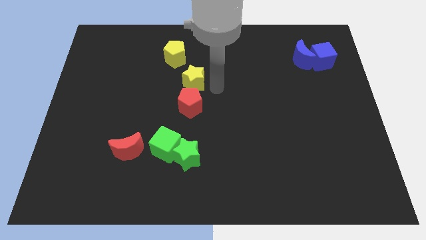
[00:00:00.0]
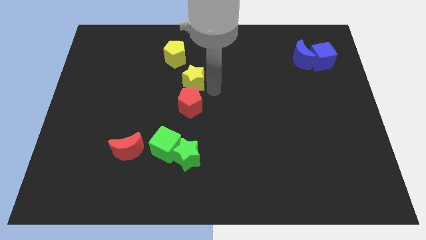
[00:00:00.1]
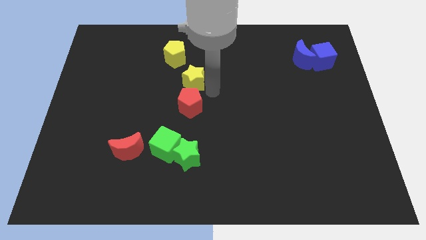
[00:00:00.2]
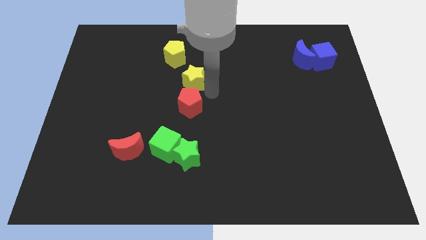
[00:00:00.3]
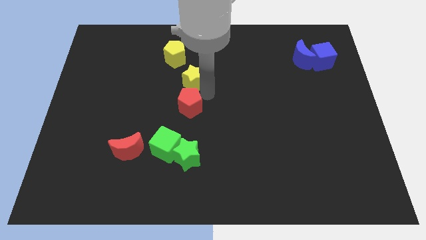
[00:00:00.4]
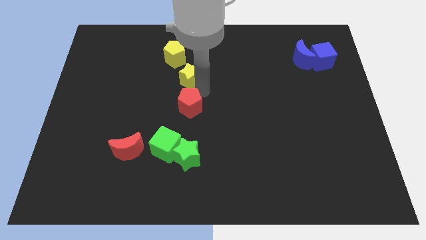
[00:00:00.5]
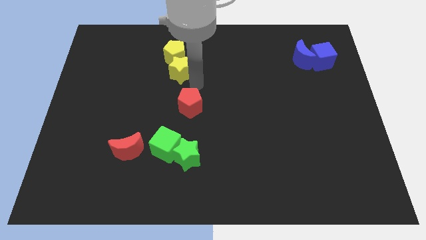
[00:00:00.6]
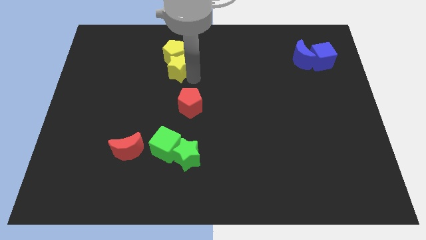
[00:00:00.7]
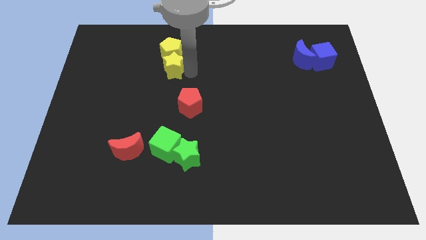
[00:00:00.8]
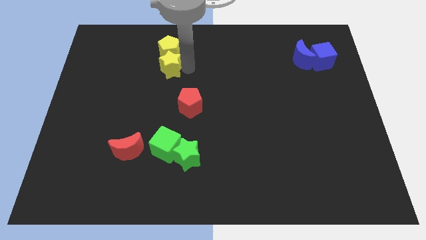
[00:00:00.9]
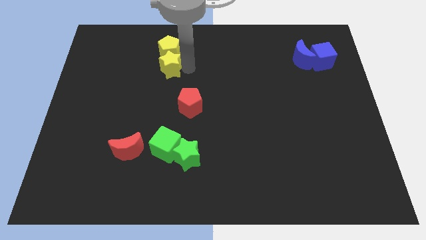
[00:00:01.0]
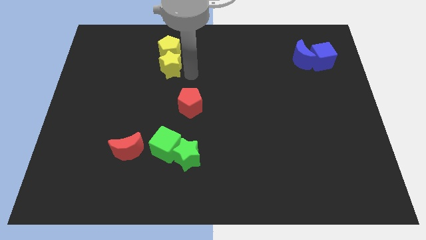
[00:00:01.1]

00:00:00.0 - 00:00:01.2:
push the yellow star to the bottom of the yellow pentagon

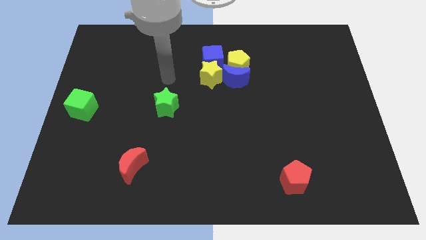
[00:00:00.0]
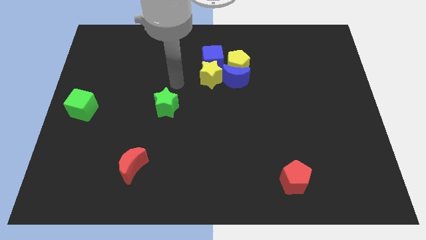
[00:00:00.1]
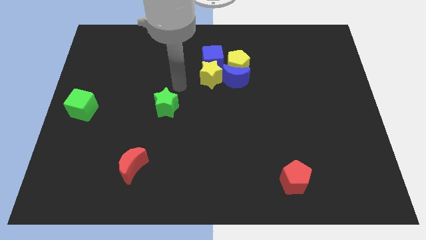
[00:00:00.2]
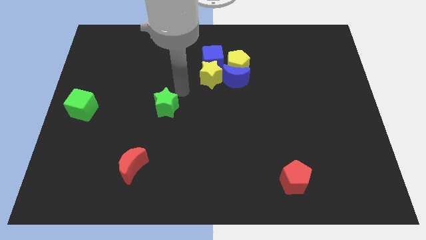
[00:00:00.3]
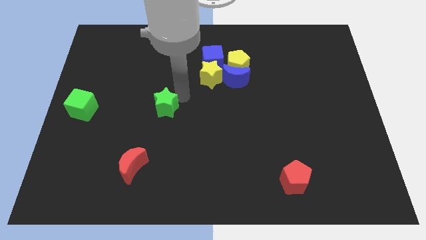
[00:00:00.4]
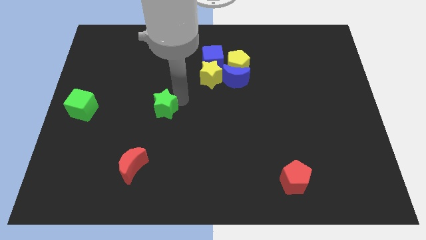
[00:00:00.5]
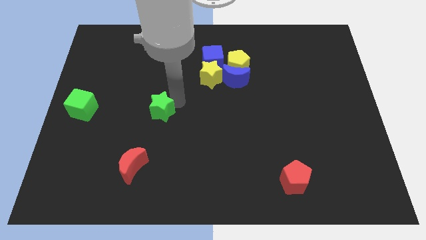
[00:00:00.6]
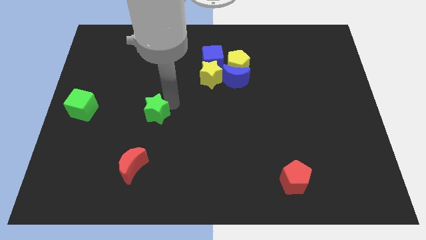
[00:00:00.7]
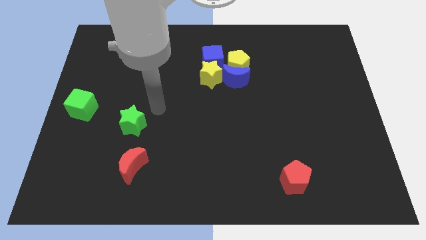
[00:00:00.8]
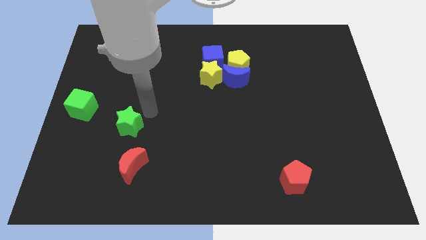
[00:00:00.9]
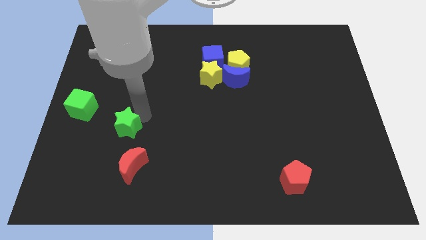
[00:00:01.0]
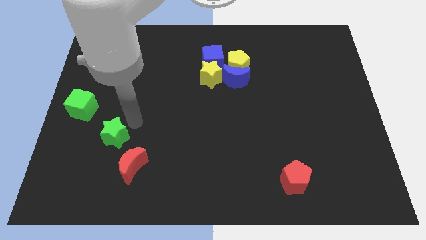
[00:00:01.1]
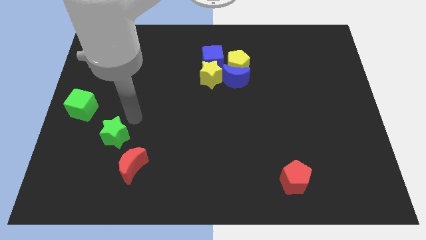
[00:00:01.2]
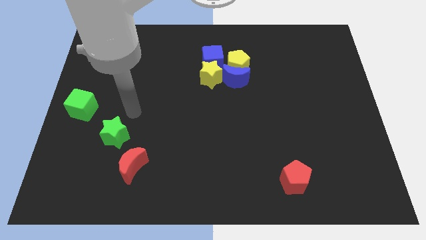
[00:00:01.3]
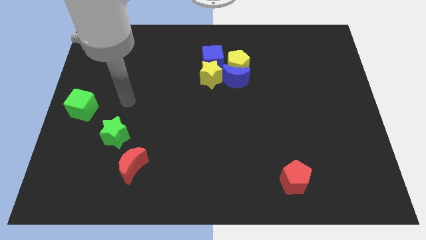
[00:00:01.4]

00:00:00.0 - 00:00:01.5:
put the green star in between the green cube and red crescent

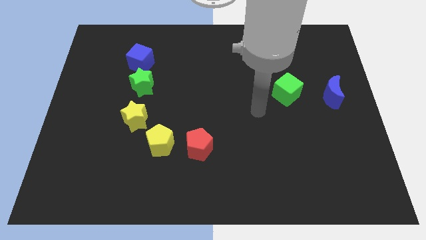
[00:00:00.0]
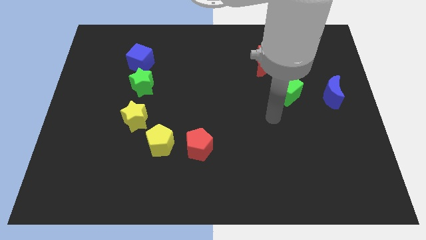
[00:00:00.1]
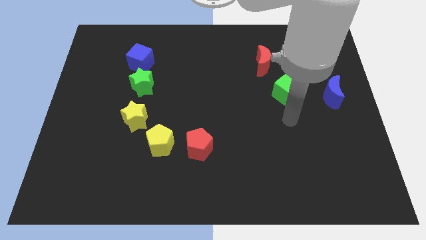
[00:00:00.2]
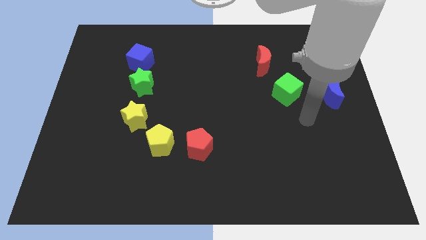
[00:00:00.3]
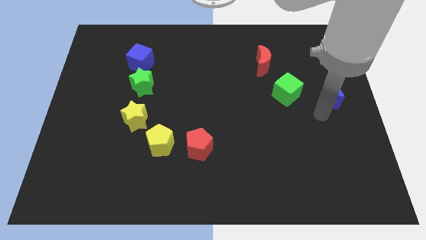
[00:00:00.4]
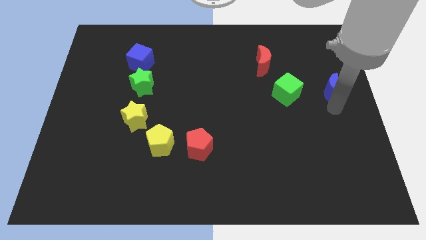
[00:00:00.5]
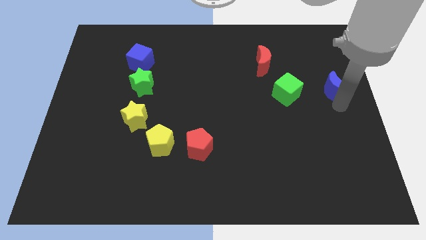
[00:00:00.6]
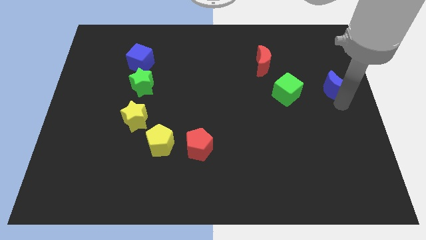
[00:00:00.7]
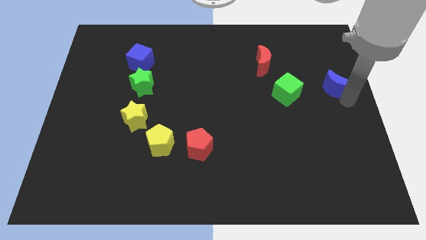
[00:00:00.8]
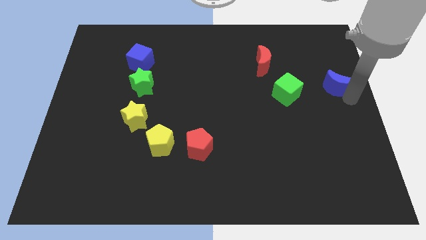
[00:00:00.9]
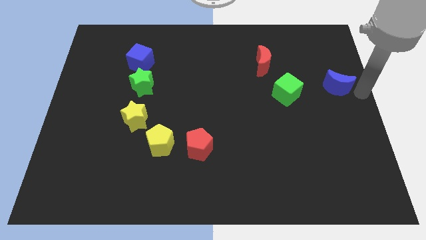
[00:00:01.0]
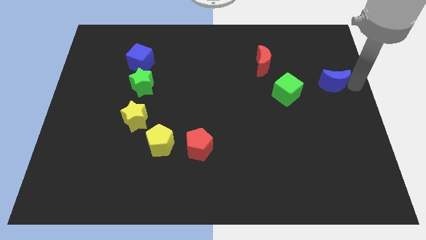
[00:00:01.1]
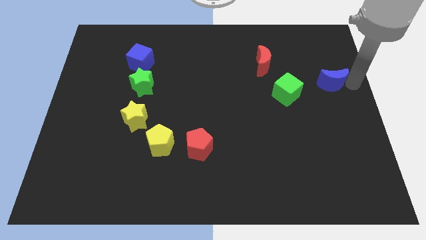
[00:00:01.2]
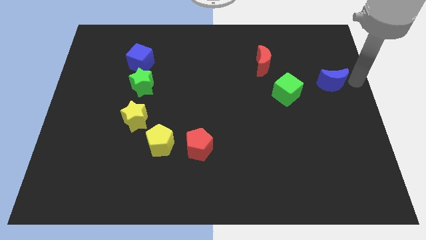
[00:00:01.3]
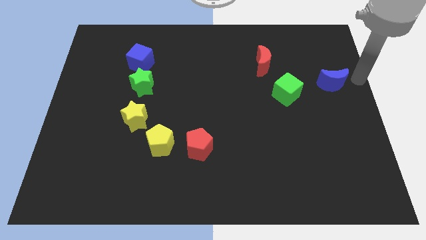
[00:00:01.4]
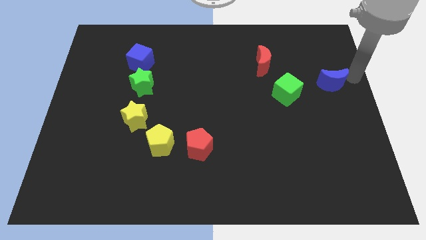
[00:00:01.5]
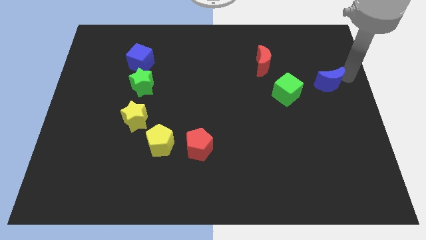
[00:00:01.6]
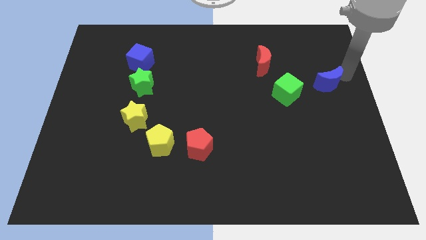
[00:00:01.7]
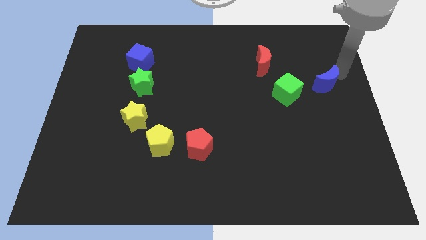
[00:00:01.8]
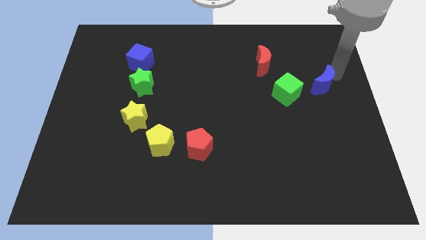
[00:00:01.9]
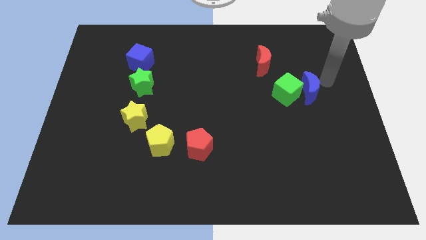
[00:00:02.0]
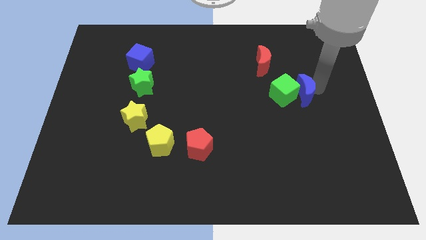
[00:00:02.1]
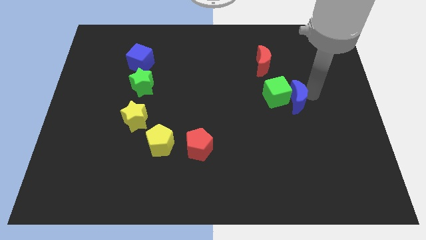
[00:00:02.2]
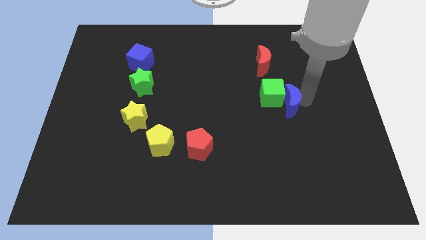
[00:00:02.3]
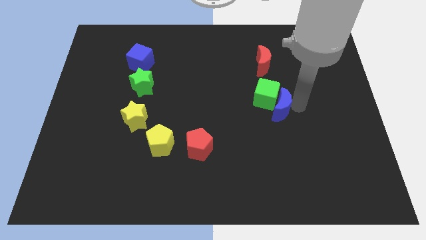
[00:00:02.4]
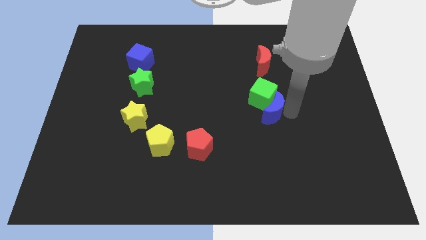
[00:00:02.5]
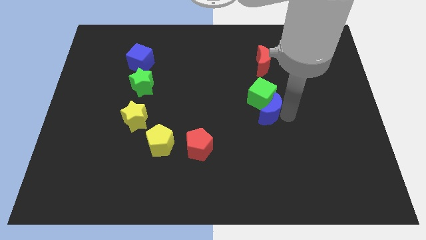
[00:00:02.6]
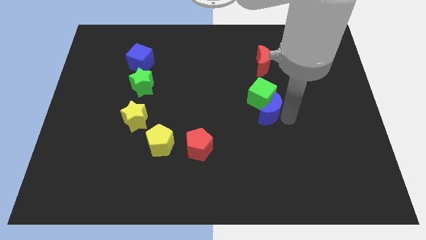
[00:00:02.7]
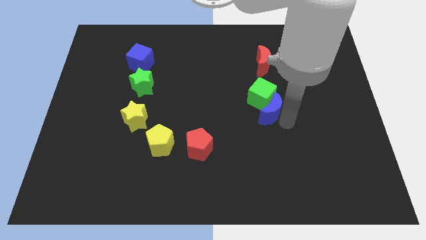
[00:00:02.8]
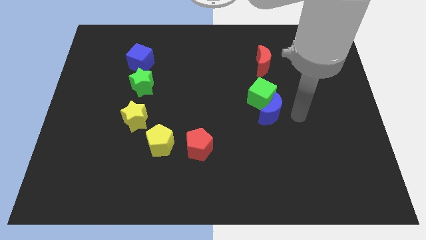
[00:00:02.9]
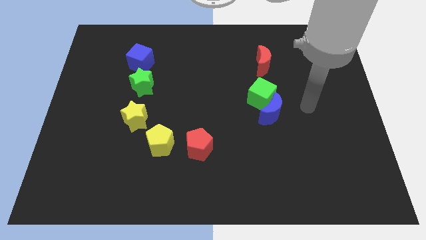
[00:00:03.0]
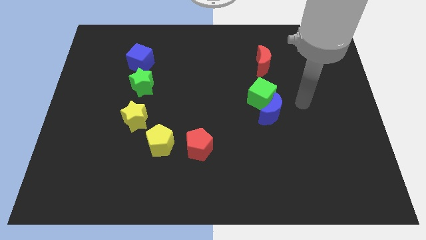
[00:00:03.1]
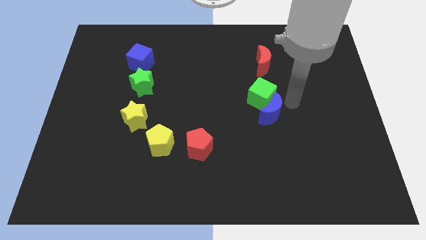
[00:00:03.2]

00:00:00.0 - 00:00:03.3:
push blue crescent into the green cube

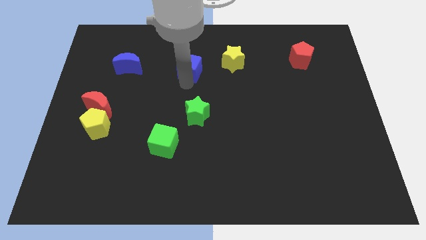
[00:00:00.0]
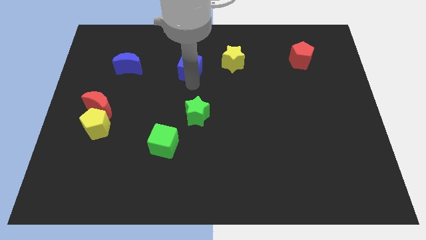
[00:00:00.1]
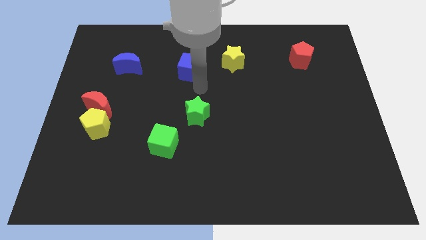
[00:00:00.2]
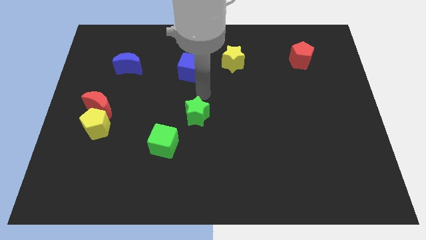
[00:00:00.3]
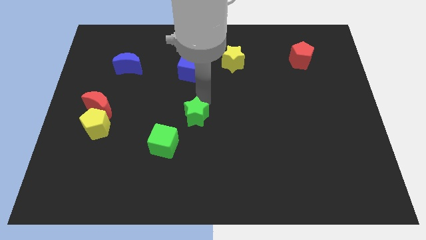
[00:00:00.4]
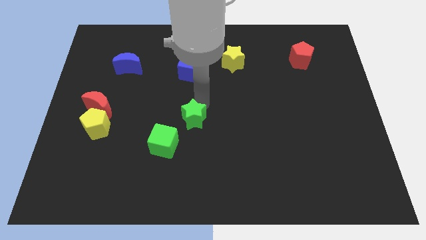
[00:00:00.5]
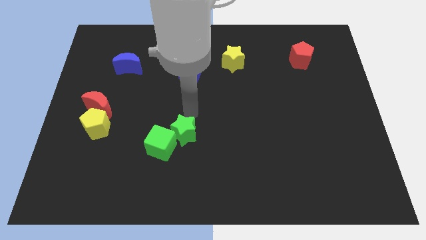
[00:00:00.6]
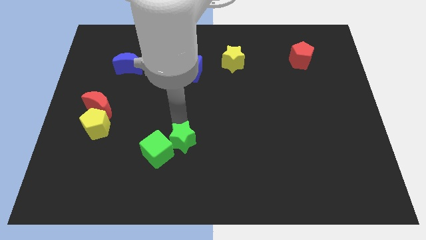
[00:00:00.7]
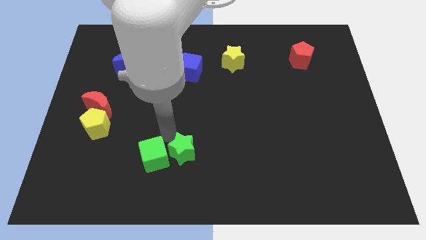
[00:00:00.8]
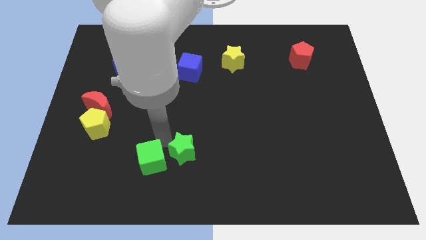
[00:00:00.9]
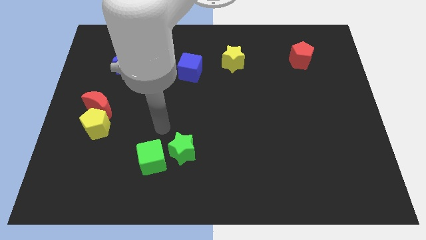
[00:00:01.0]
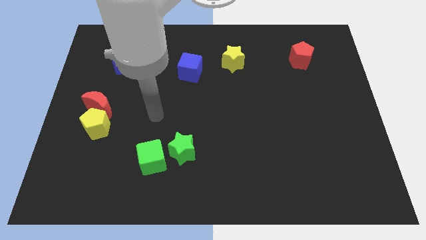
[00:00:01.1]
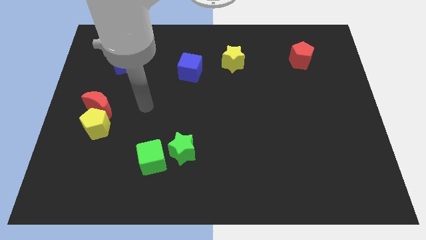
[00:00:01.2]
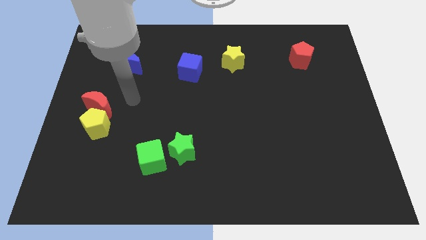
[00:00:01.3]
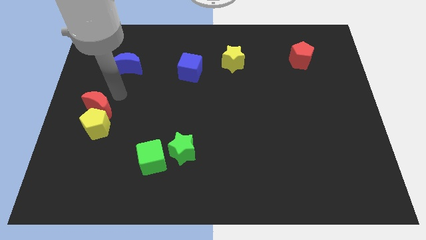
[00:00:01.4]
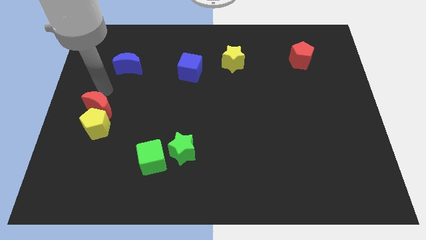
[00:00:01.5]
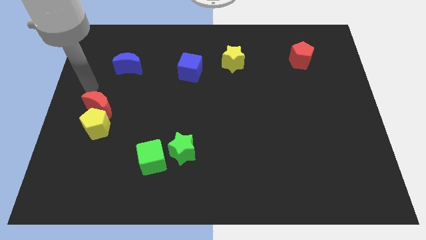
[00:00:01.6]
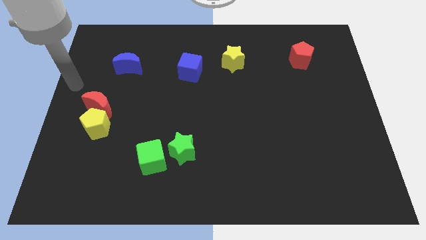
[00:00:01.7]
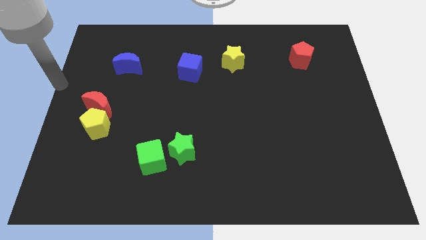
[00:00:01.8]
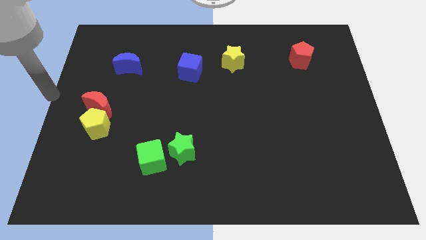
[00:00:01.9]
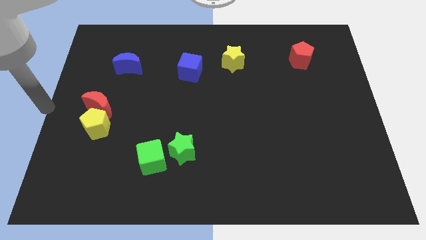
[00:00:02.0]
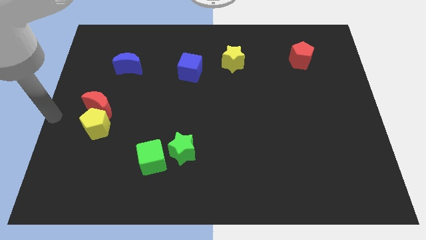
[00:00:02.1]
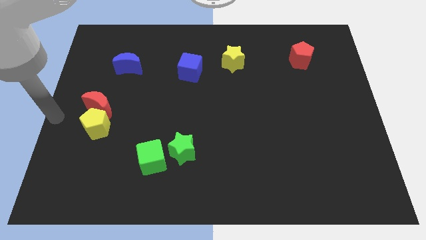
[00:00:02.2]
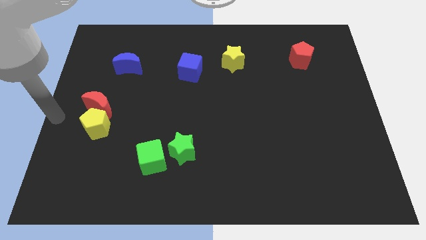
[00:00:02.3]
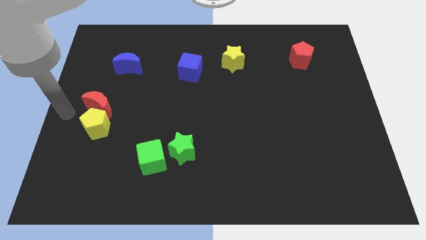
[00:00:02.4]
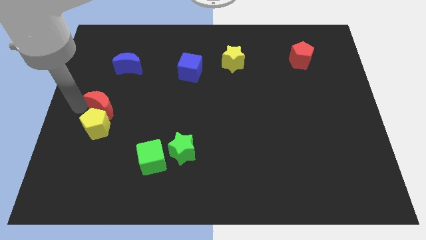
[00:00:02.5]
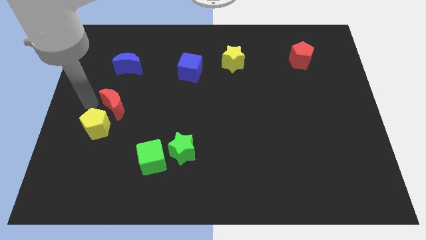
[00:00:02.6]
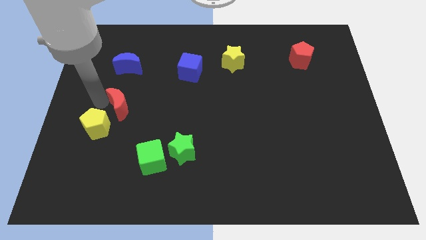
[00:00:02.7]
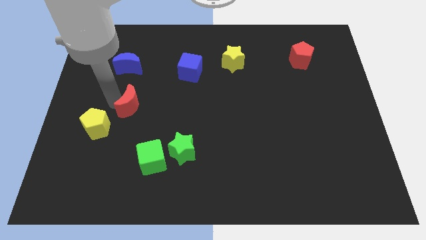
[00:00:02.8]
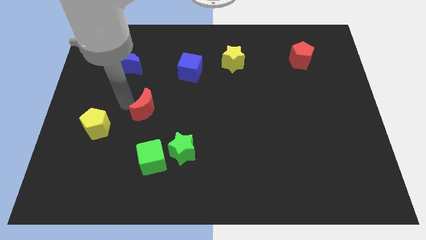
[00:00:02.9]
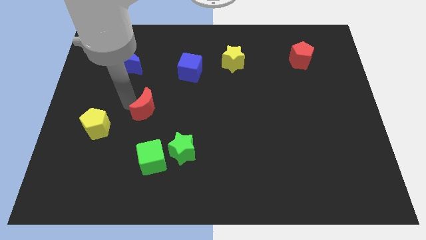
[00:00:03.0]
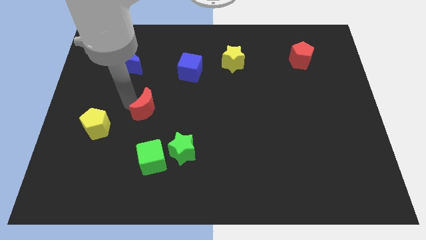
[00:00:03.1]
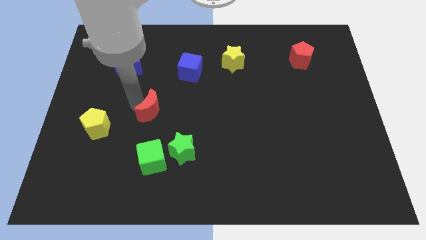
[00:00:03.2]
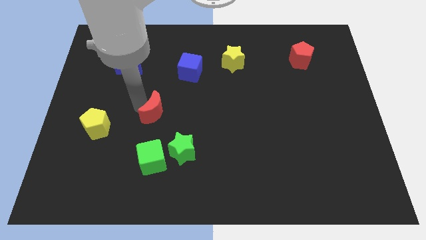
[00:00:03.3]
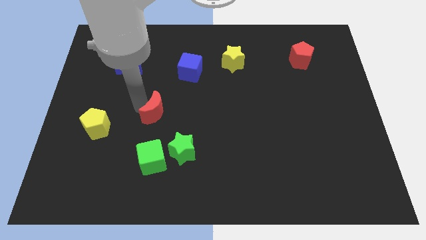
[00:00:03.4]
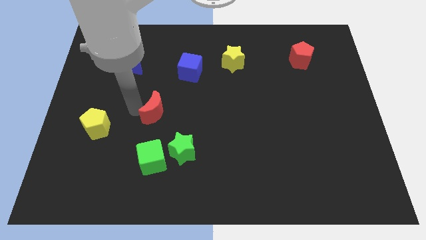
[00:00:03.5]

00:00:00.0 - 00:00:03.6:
make a triangle out of green blocks and the red moon
